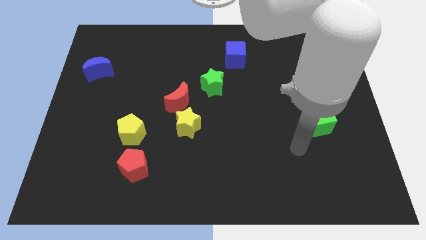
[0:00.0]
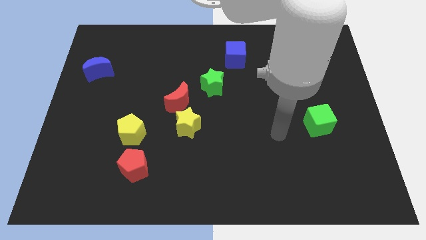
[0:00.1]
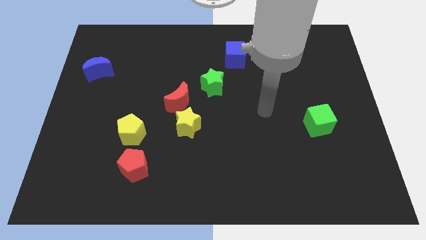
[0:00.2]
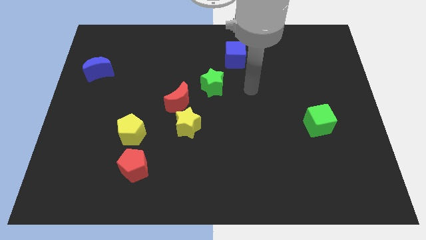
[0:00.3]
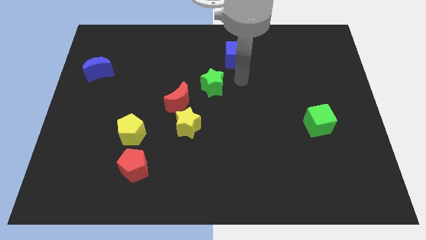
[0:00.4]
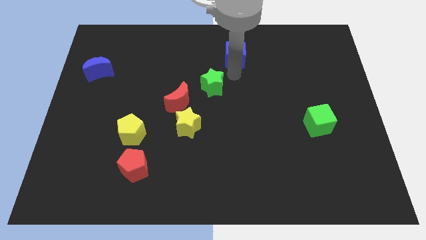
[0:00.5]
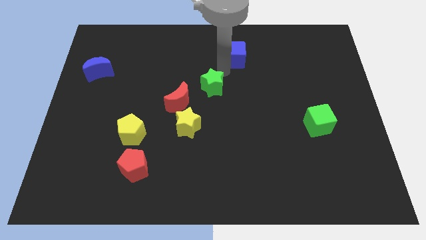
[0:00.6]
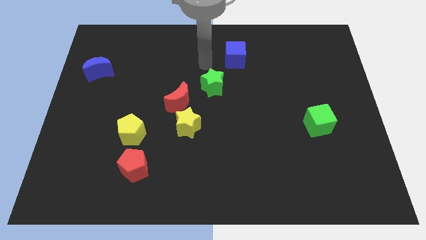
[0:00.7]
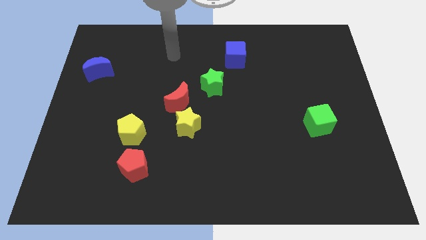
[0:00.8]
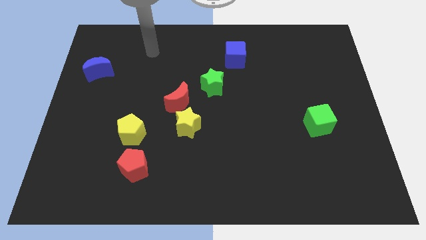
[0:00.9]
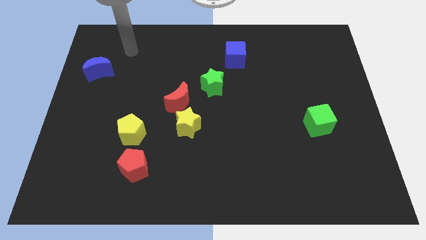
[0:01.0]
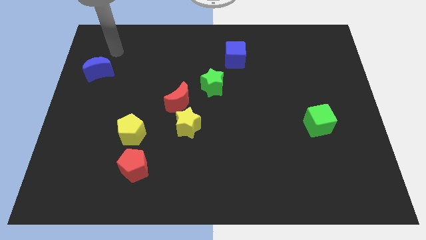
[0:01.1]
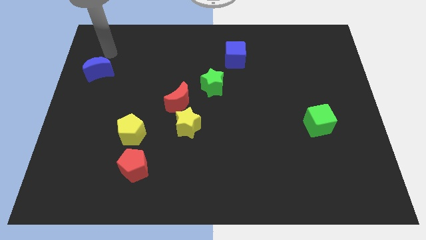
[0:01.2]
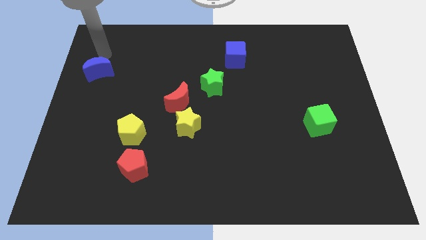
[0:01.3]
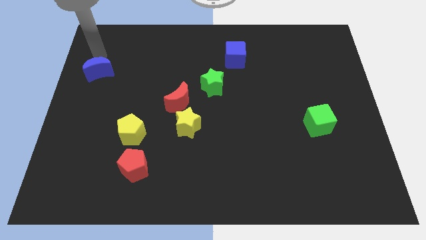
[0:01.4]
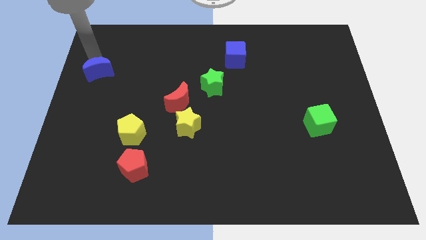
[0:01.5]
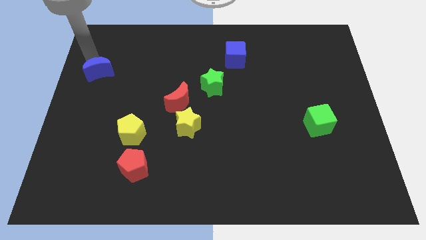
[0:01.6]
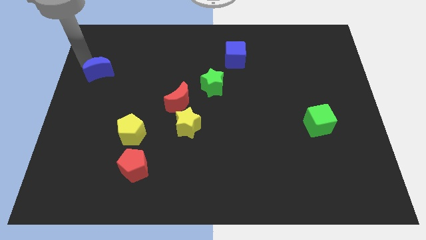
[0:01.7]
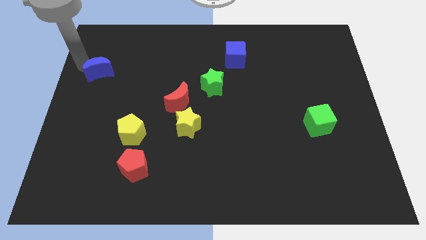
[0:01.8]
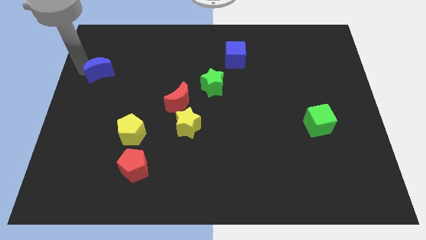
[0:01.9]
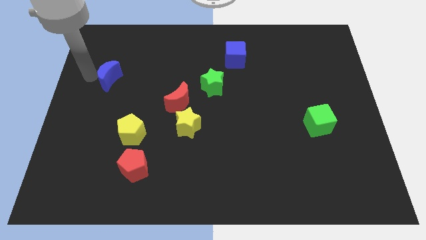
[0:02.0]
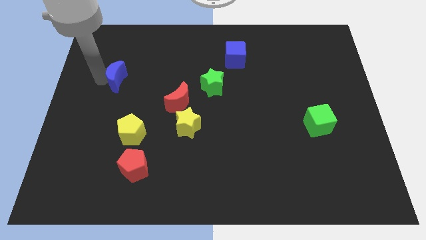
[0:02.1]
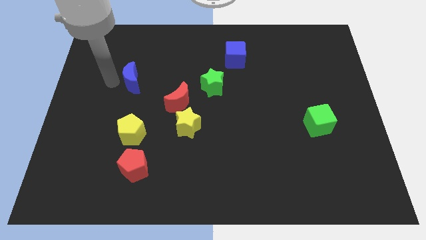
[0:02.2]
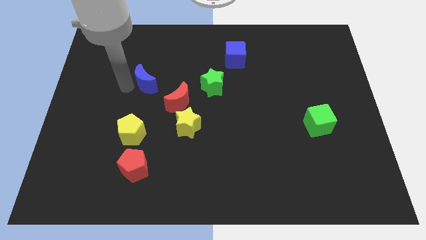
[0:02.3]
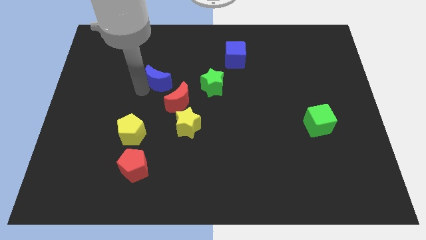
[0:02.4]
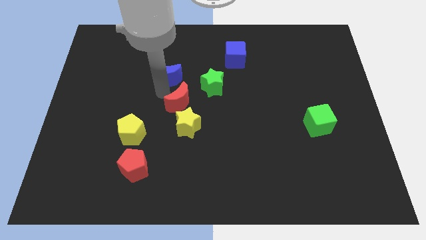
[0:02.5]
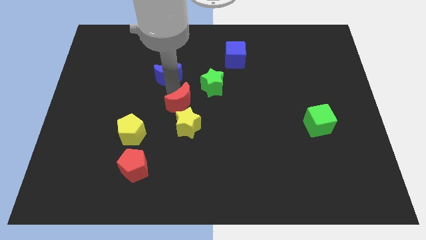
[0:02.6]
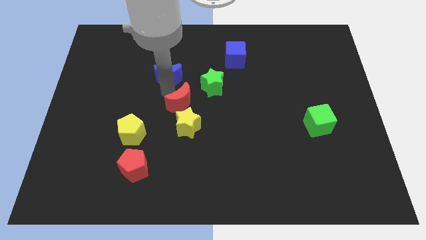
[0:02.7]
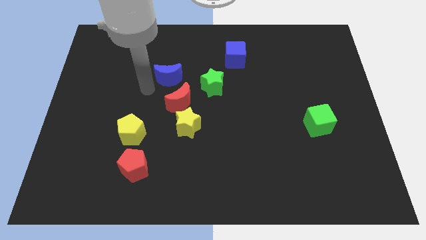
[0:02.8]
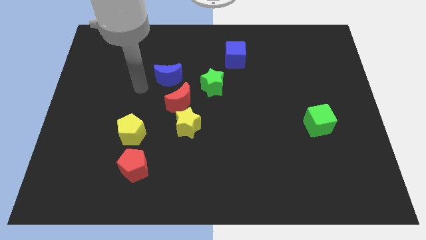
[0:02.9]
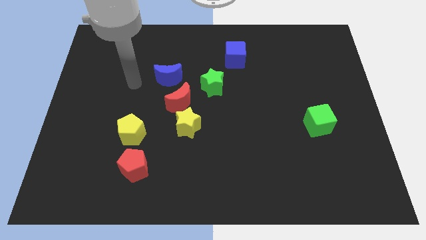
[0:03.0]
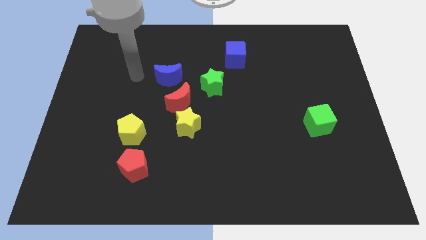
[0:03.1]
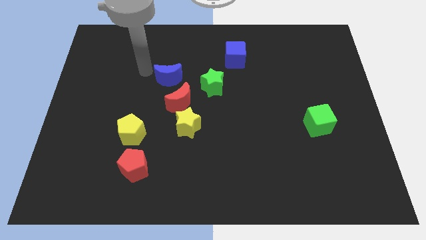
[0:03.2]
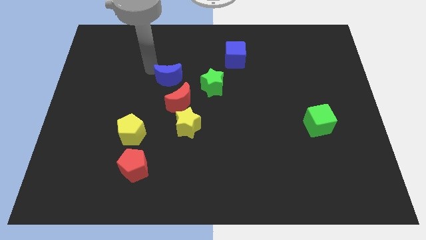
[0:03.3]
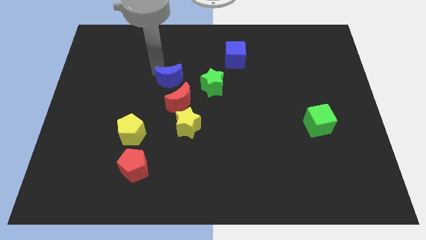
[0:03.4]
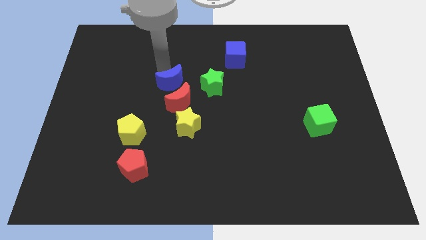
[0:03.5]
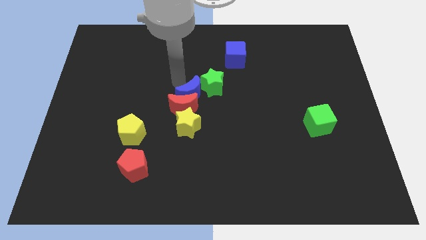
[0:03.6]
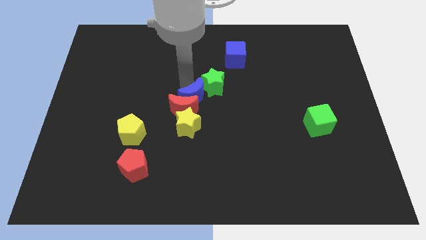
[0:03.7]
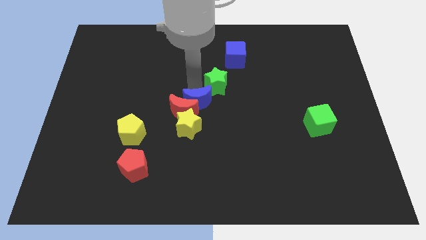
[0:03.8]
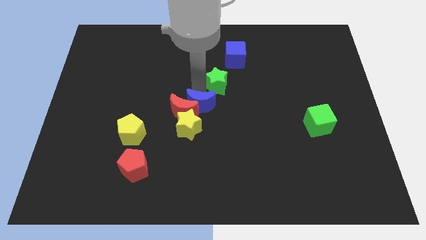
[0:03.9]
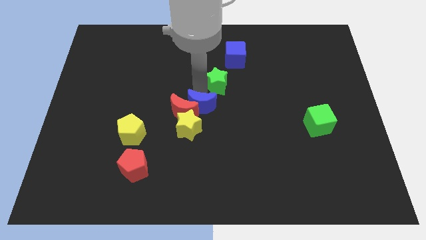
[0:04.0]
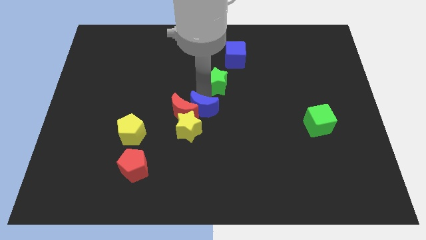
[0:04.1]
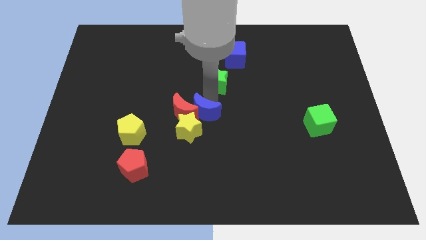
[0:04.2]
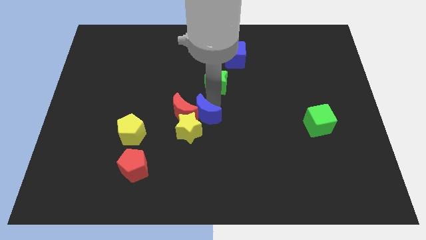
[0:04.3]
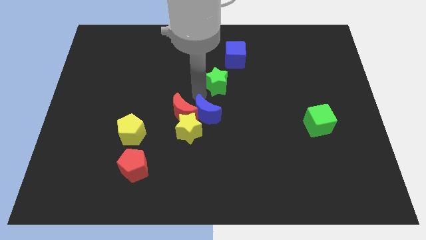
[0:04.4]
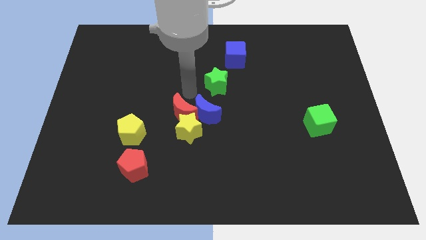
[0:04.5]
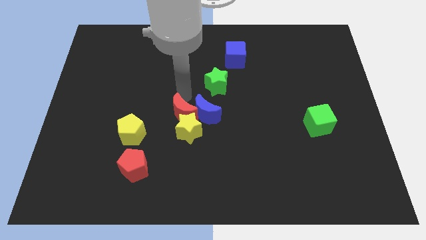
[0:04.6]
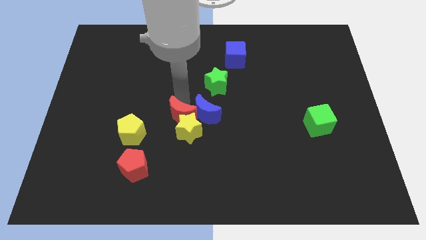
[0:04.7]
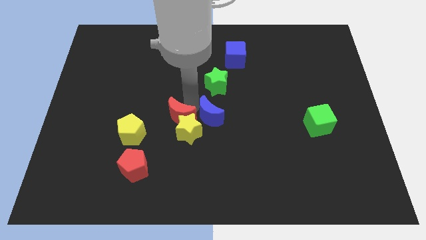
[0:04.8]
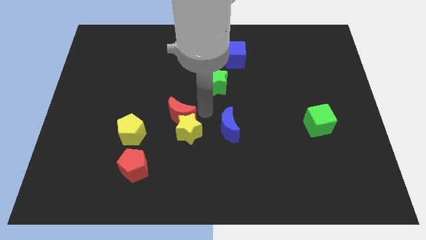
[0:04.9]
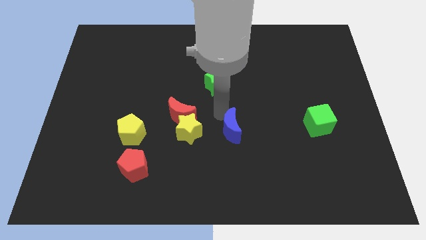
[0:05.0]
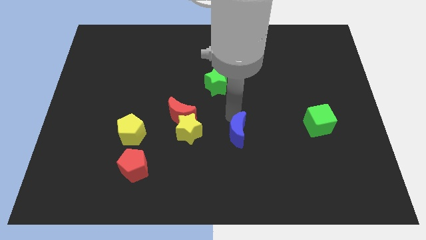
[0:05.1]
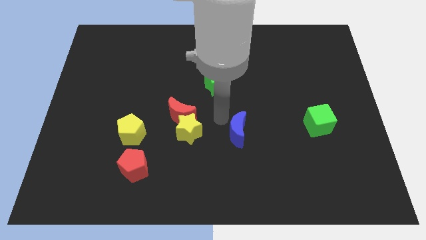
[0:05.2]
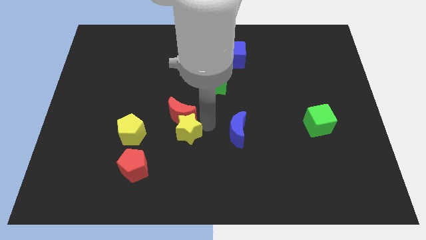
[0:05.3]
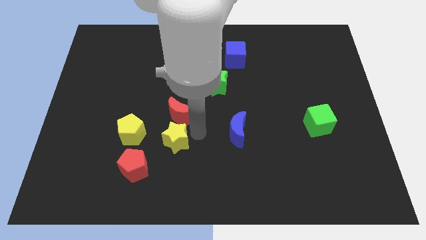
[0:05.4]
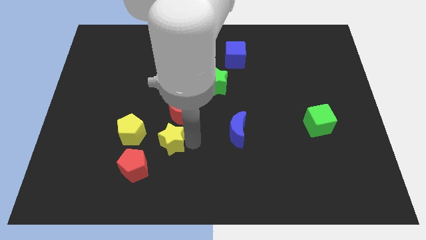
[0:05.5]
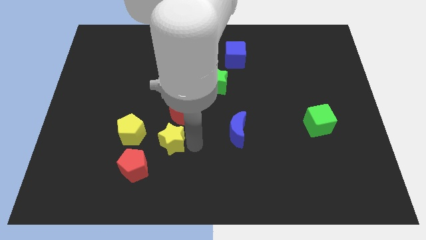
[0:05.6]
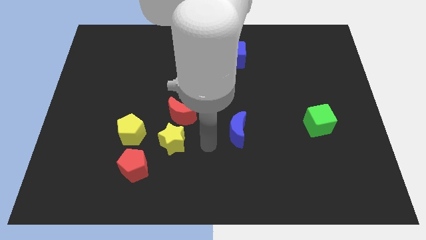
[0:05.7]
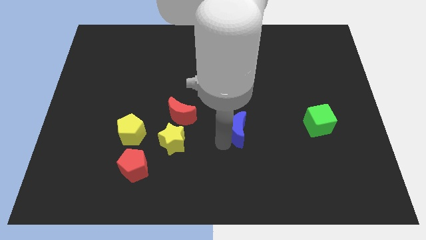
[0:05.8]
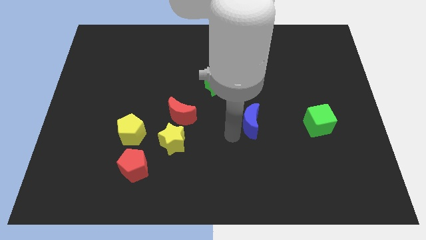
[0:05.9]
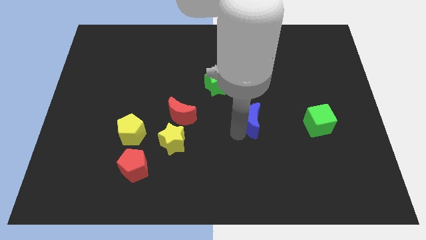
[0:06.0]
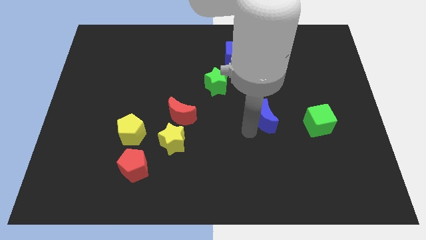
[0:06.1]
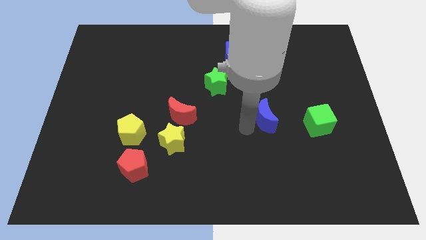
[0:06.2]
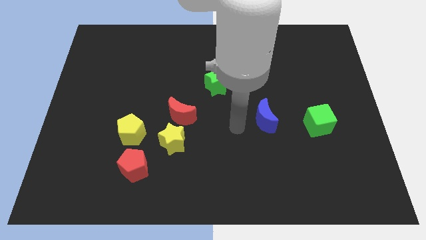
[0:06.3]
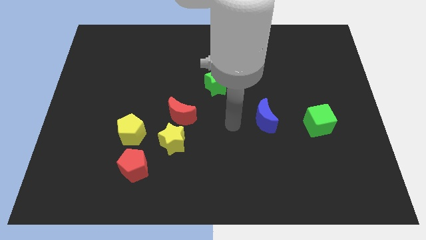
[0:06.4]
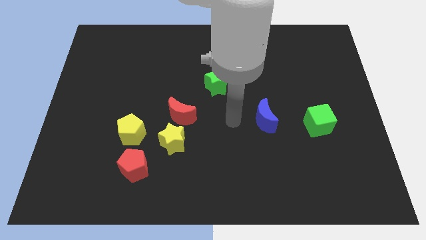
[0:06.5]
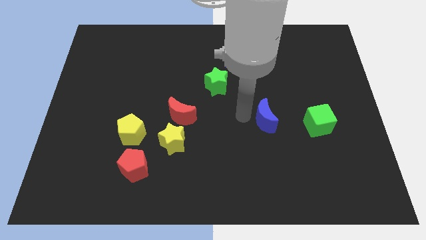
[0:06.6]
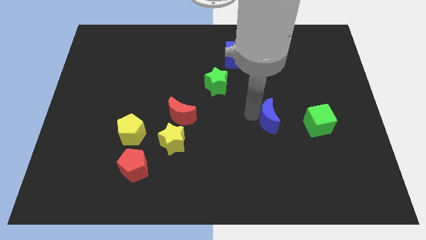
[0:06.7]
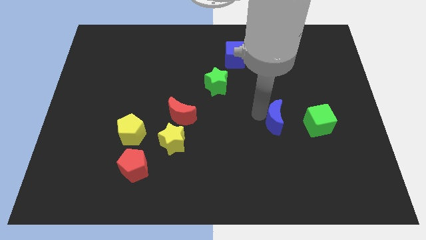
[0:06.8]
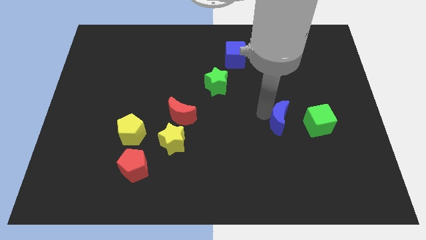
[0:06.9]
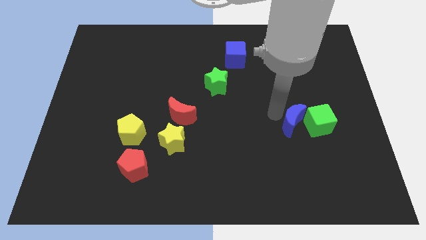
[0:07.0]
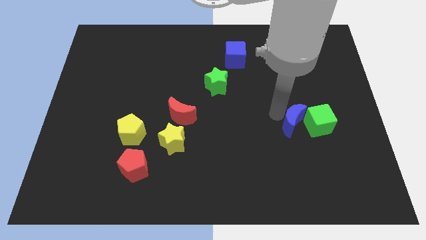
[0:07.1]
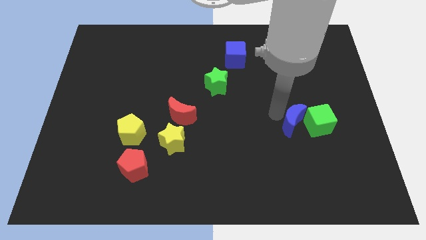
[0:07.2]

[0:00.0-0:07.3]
slide the blue moon next to the green cube

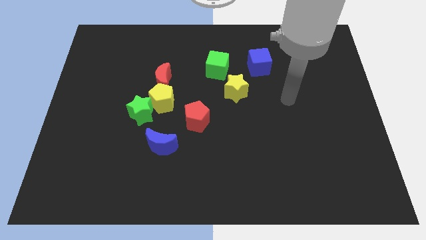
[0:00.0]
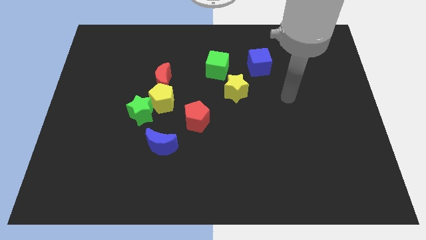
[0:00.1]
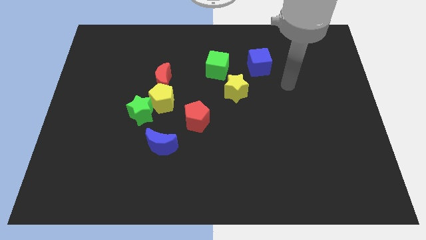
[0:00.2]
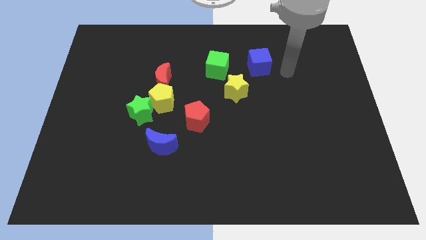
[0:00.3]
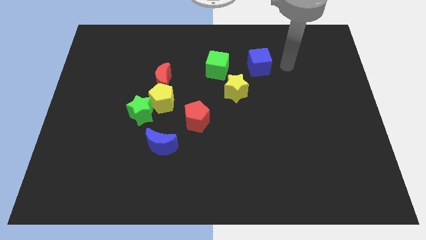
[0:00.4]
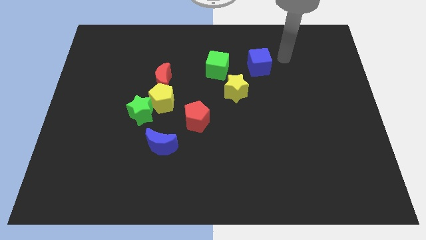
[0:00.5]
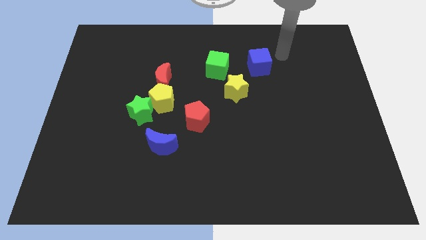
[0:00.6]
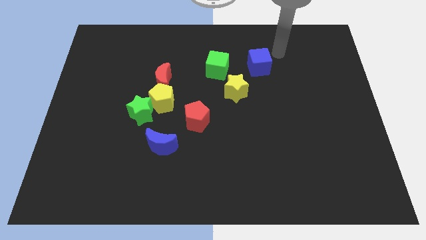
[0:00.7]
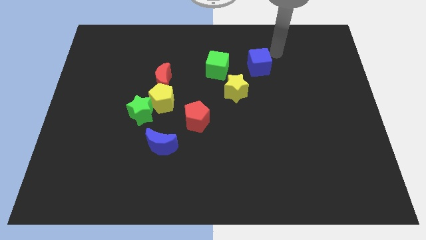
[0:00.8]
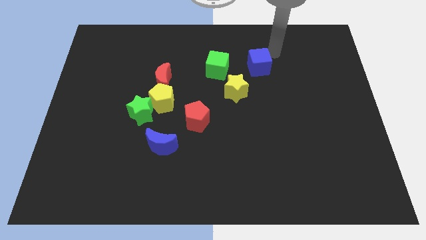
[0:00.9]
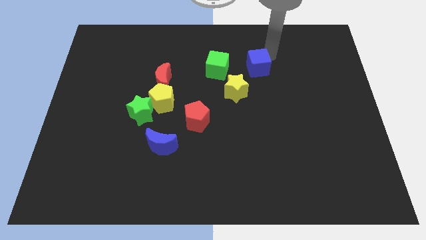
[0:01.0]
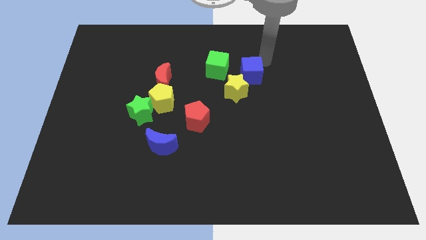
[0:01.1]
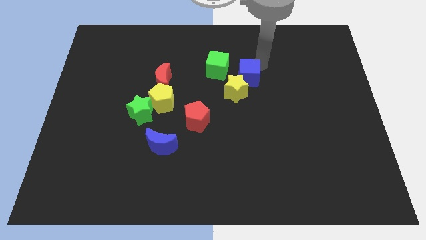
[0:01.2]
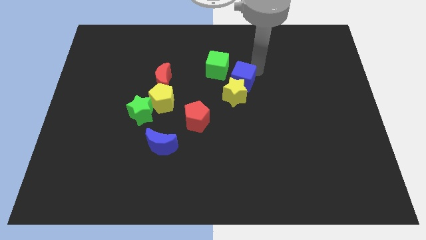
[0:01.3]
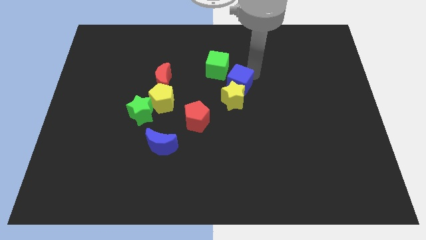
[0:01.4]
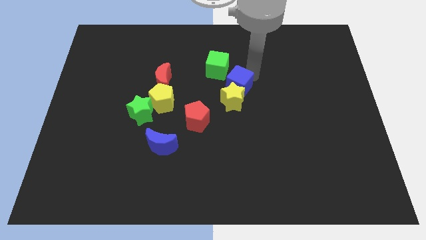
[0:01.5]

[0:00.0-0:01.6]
put the blue cube close to the yellow star
